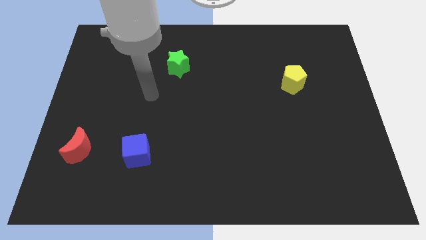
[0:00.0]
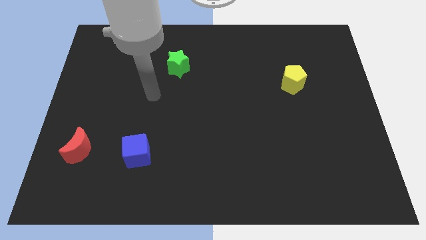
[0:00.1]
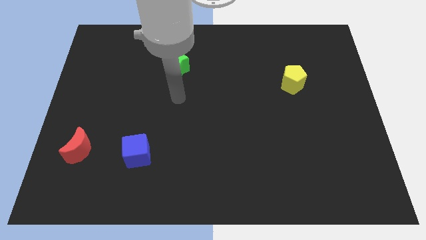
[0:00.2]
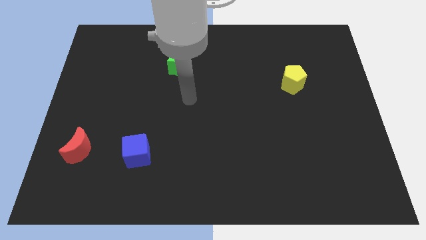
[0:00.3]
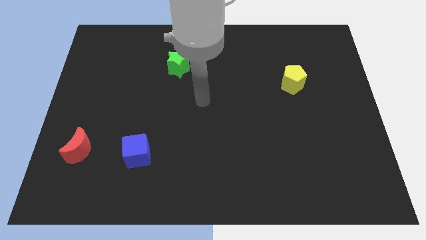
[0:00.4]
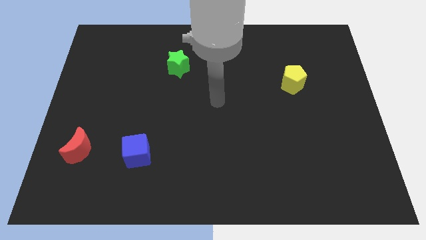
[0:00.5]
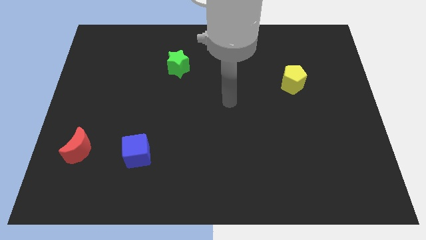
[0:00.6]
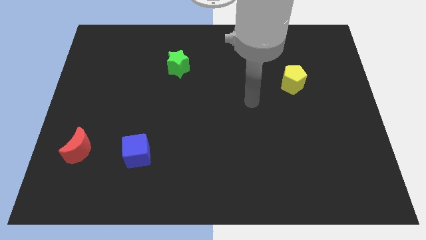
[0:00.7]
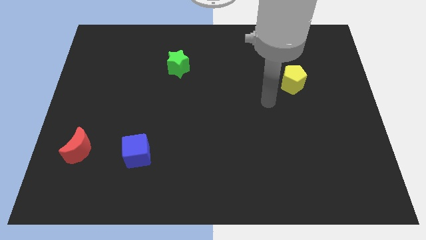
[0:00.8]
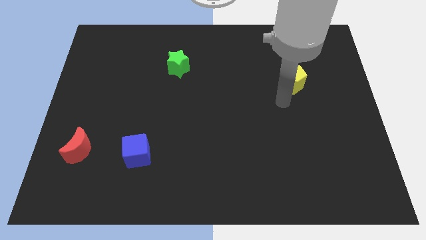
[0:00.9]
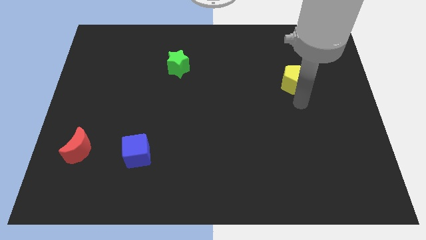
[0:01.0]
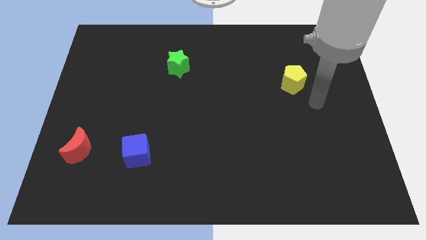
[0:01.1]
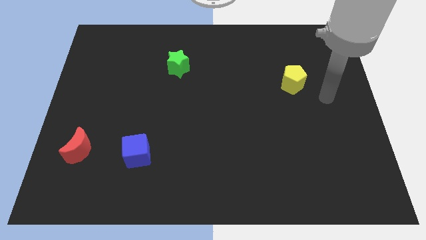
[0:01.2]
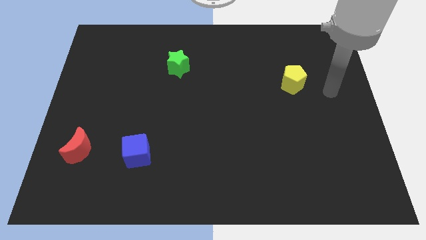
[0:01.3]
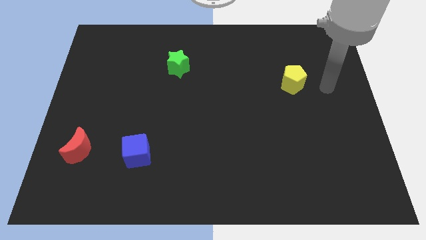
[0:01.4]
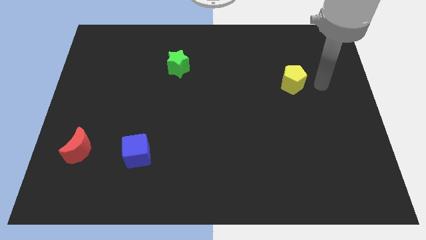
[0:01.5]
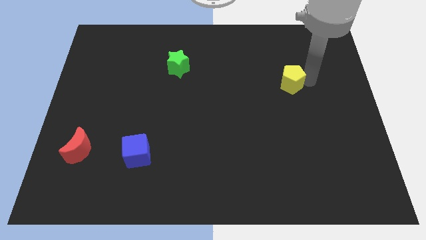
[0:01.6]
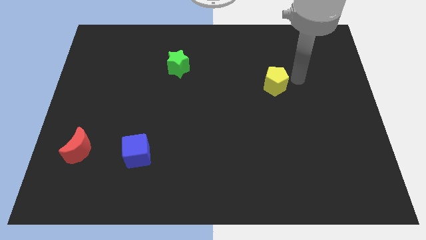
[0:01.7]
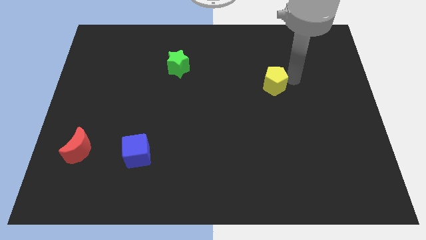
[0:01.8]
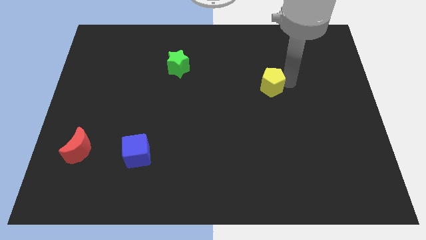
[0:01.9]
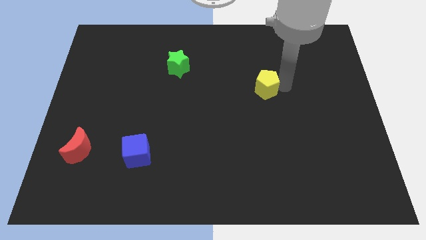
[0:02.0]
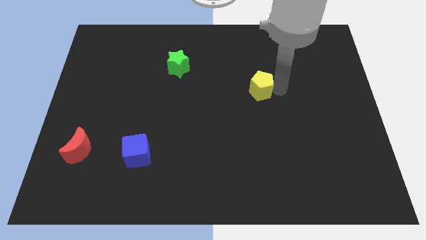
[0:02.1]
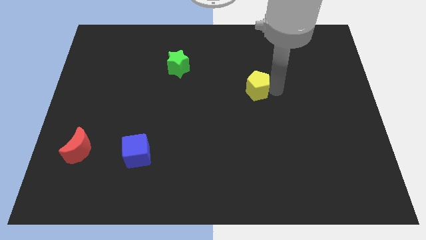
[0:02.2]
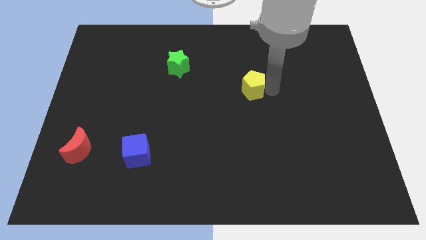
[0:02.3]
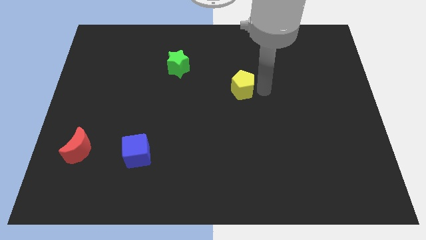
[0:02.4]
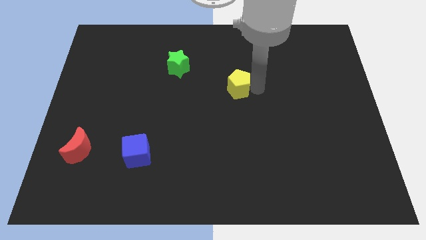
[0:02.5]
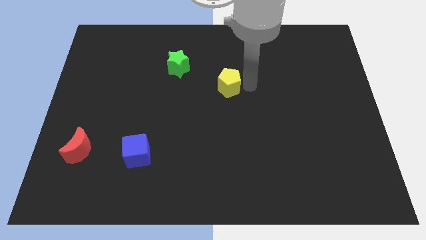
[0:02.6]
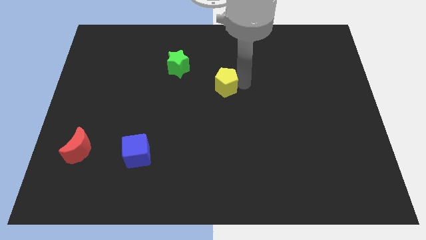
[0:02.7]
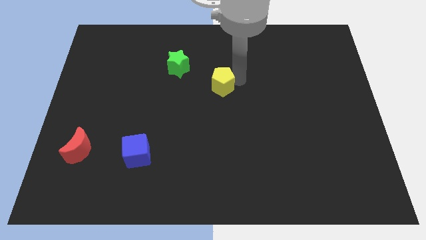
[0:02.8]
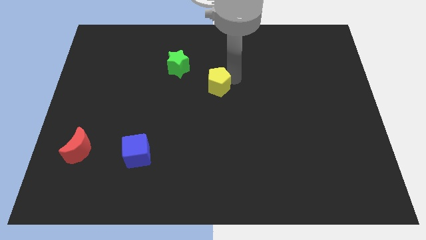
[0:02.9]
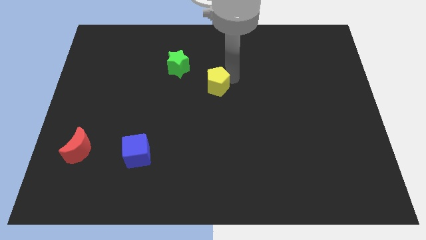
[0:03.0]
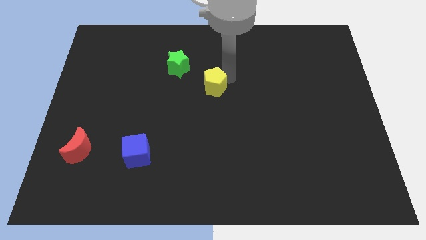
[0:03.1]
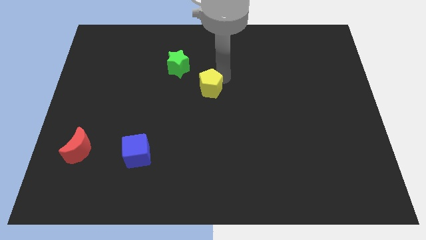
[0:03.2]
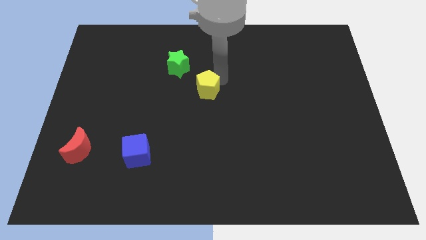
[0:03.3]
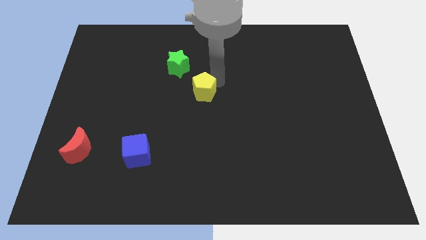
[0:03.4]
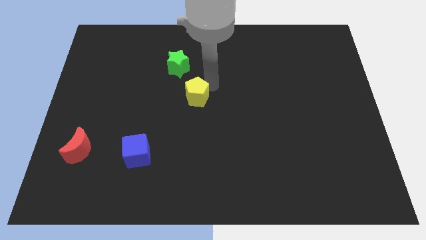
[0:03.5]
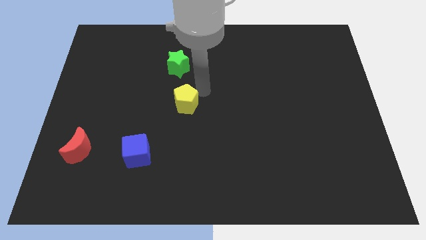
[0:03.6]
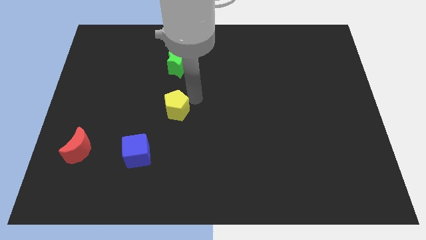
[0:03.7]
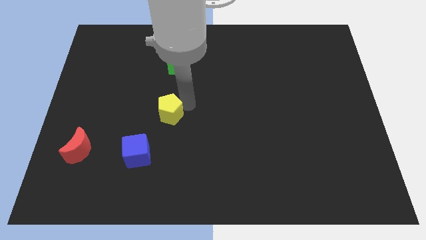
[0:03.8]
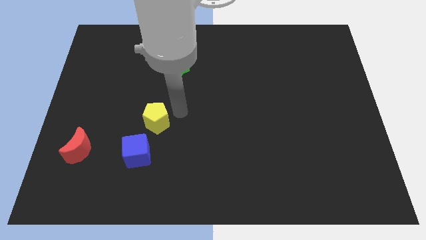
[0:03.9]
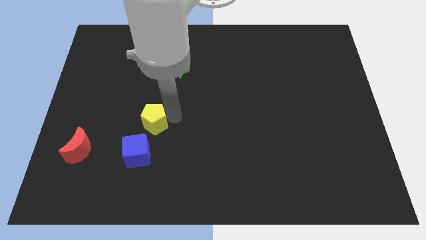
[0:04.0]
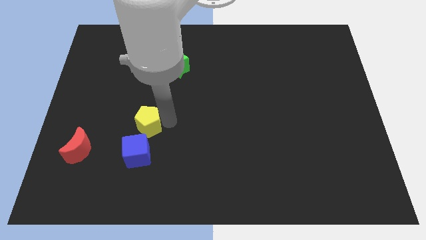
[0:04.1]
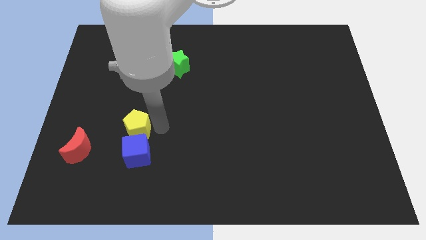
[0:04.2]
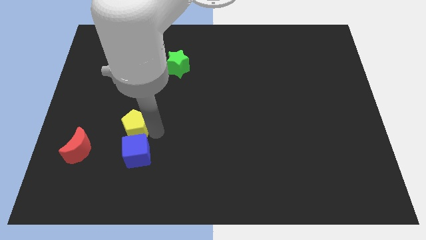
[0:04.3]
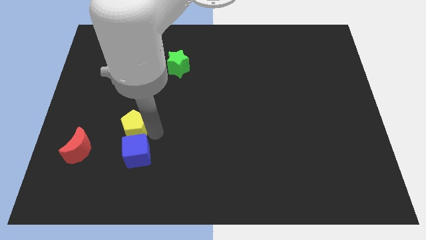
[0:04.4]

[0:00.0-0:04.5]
move the pentagon to the cube

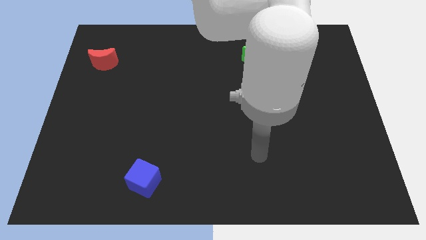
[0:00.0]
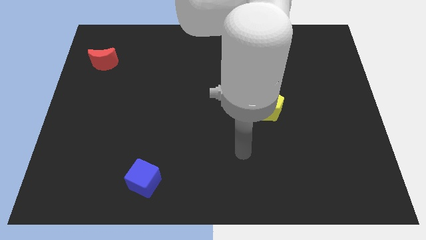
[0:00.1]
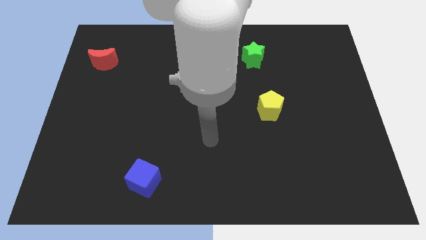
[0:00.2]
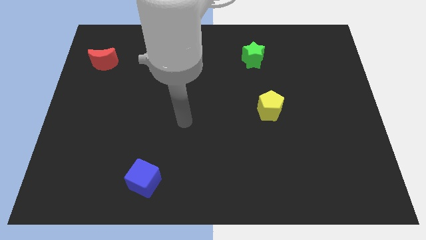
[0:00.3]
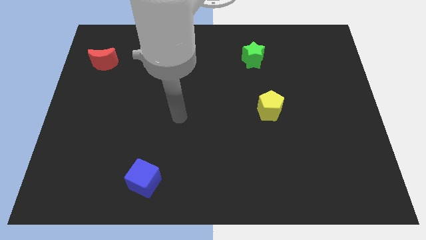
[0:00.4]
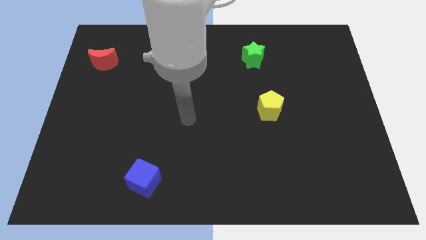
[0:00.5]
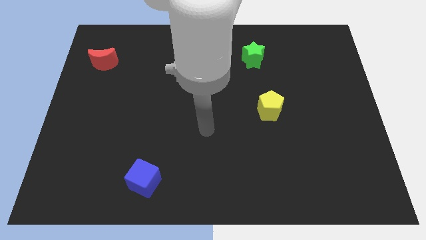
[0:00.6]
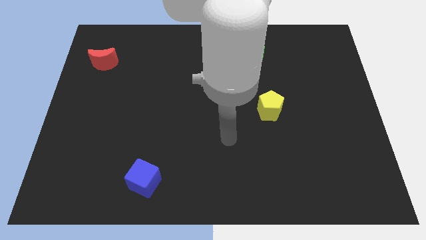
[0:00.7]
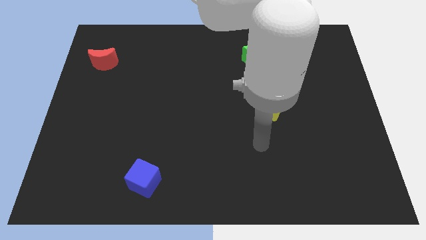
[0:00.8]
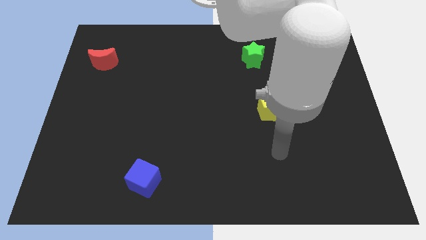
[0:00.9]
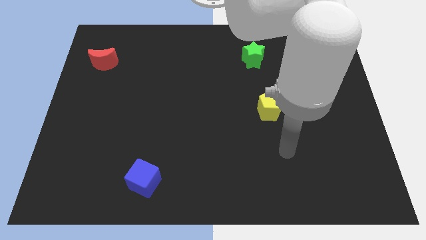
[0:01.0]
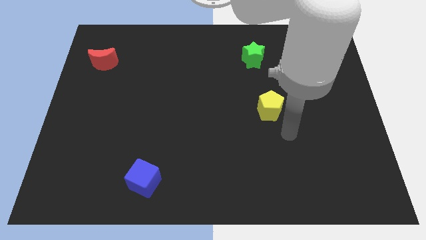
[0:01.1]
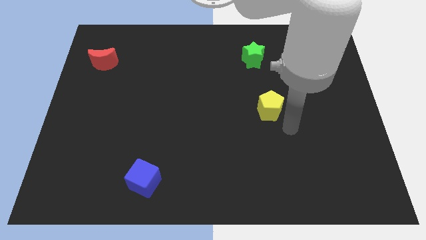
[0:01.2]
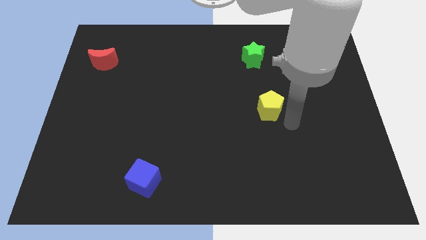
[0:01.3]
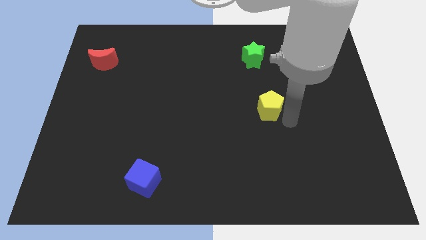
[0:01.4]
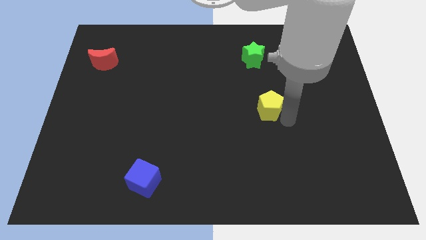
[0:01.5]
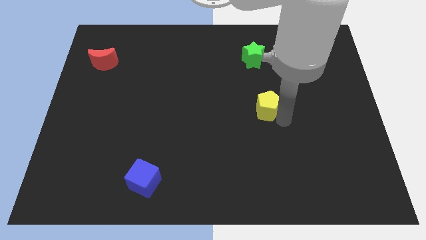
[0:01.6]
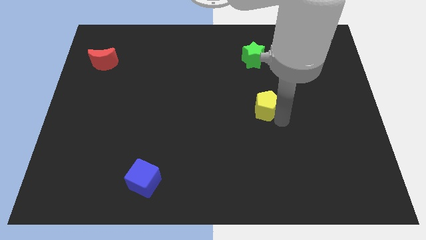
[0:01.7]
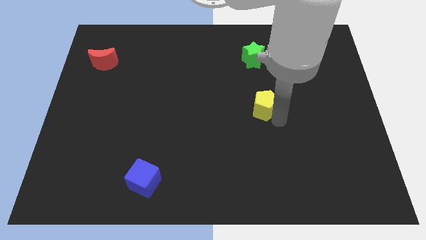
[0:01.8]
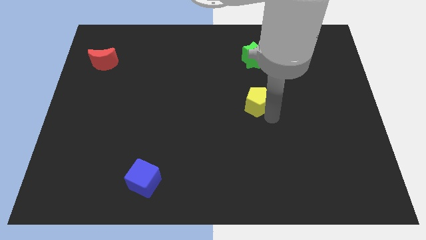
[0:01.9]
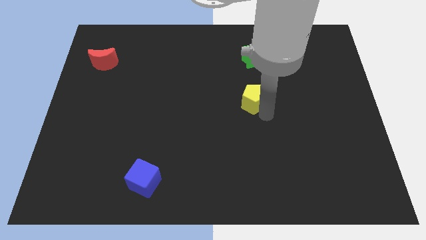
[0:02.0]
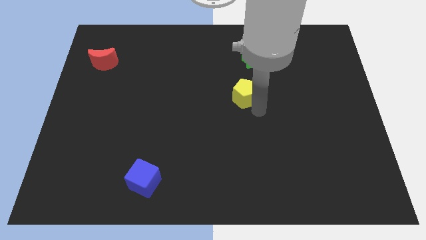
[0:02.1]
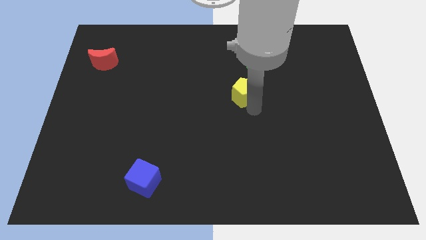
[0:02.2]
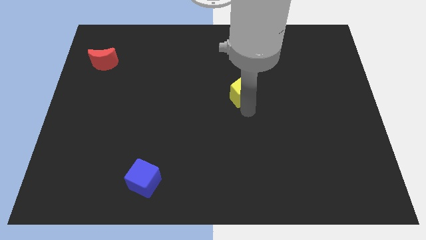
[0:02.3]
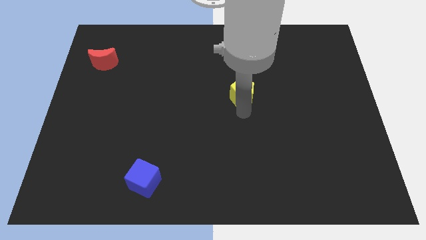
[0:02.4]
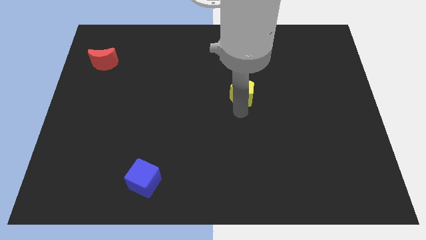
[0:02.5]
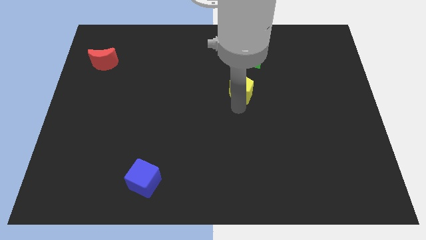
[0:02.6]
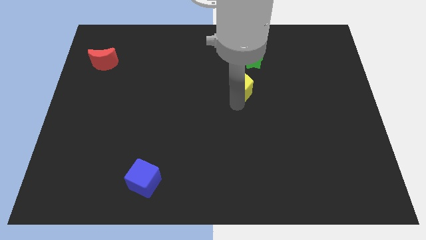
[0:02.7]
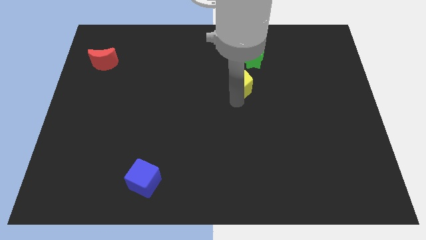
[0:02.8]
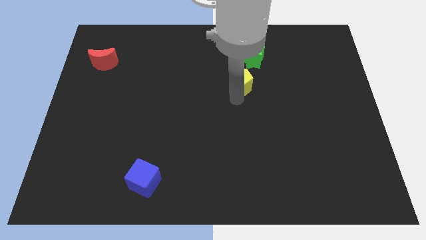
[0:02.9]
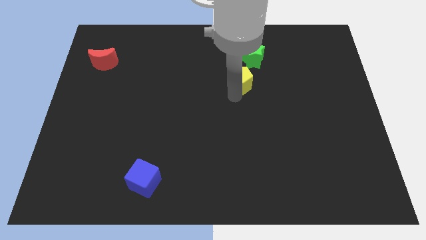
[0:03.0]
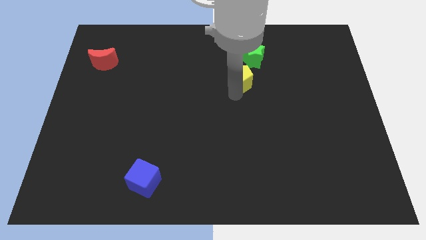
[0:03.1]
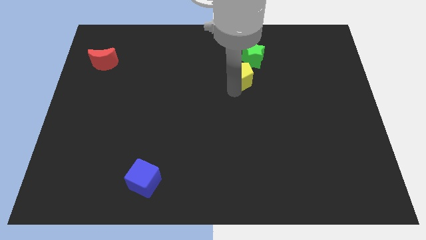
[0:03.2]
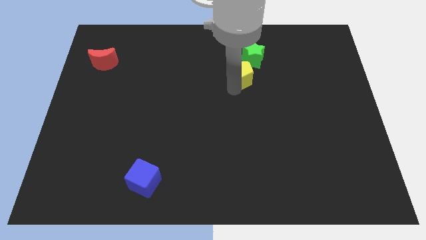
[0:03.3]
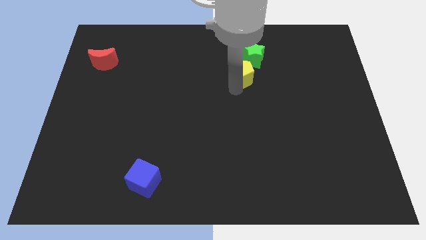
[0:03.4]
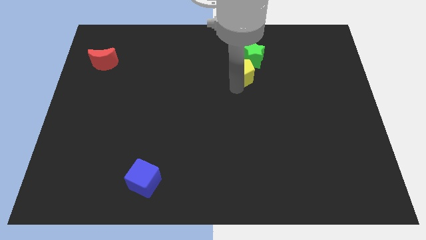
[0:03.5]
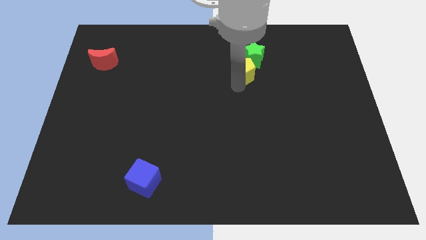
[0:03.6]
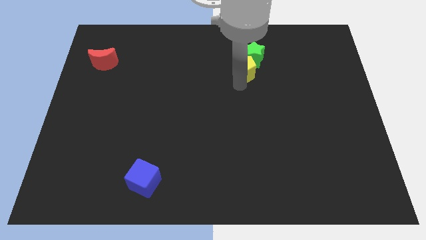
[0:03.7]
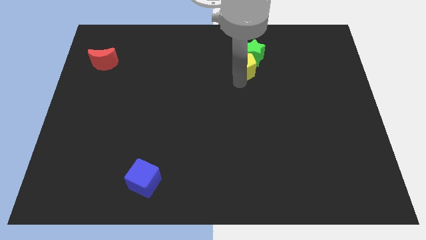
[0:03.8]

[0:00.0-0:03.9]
move the pentagon to the star

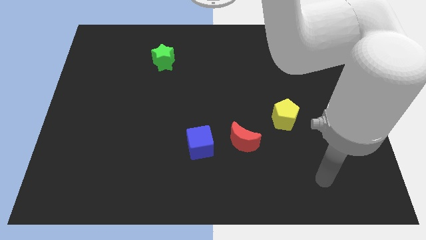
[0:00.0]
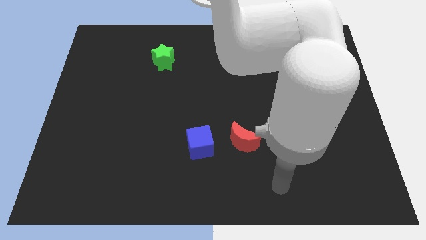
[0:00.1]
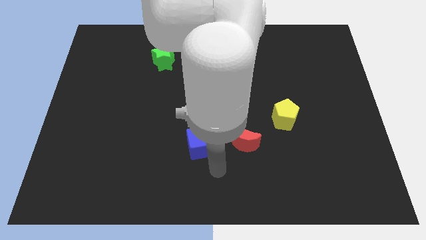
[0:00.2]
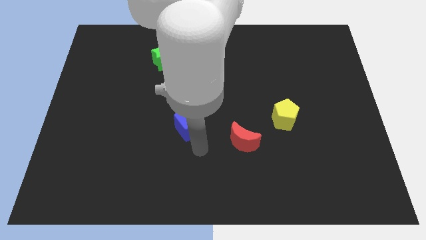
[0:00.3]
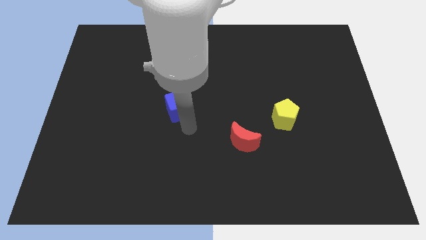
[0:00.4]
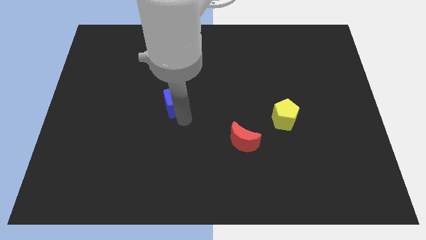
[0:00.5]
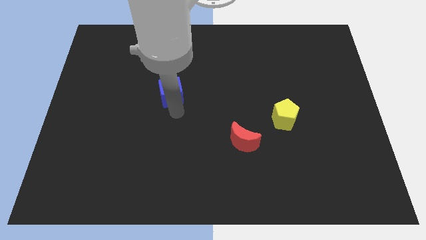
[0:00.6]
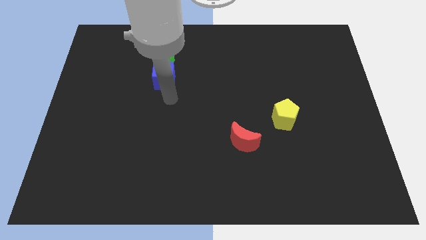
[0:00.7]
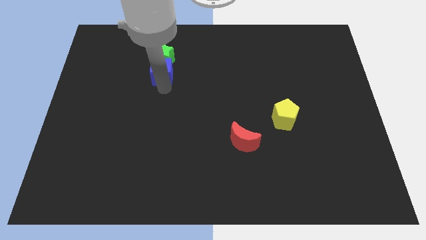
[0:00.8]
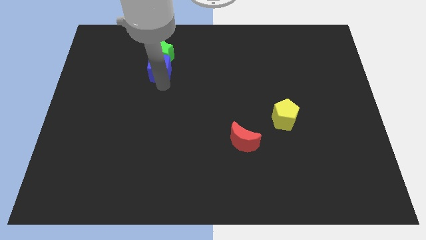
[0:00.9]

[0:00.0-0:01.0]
push the blue cube close to the star
